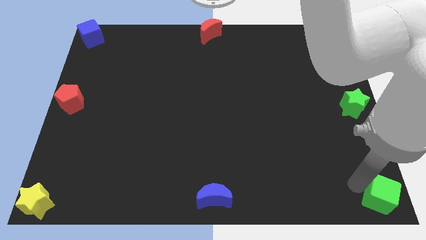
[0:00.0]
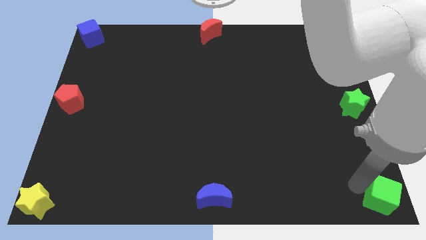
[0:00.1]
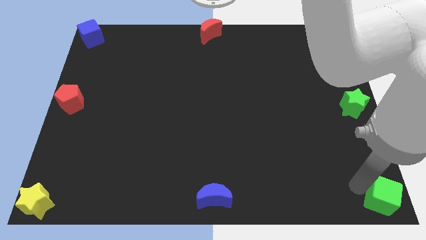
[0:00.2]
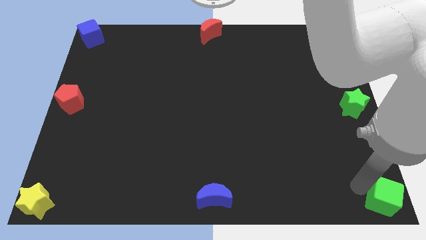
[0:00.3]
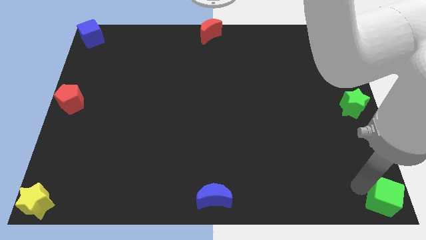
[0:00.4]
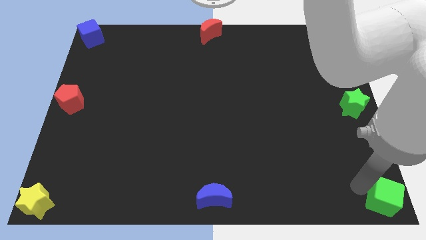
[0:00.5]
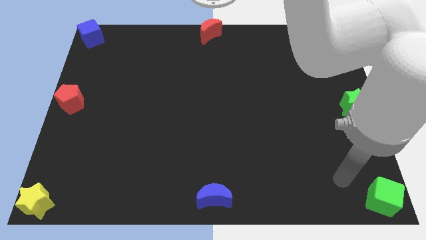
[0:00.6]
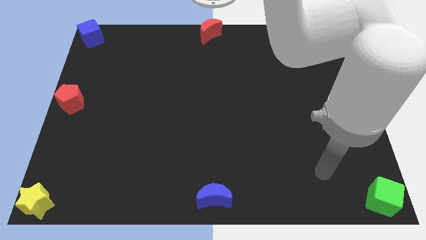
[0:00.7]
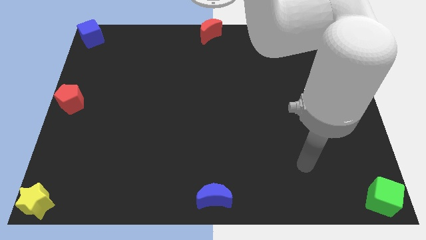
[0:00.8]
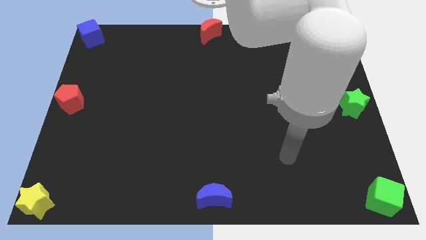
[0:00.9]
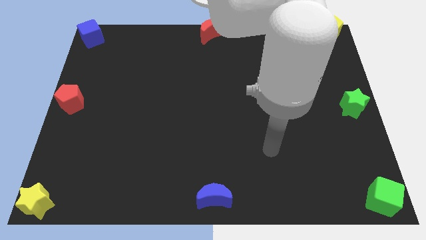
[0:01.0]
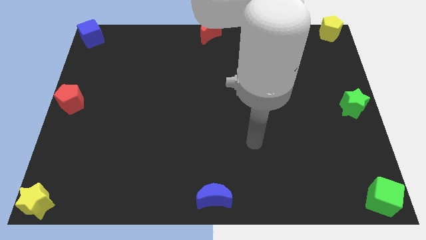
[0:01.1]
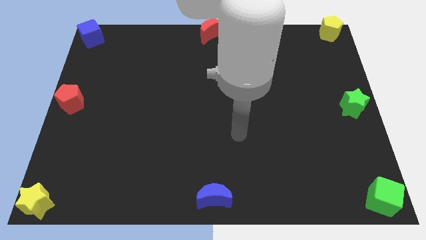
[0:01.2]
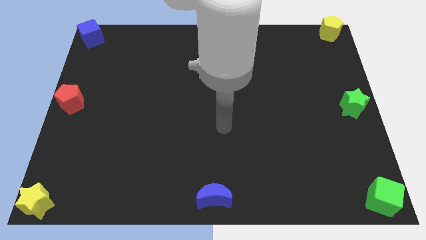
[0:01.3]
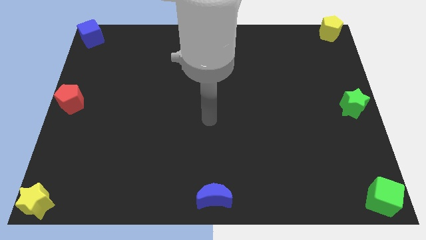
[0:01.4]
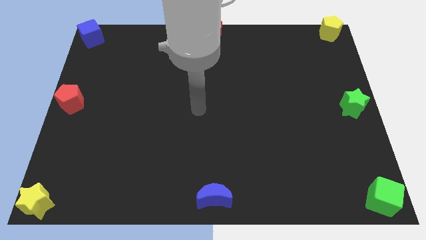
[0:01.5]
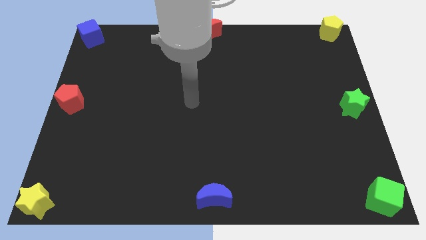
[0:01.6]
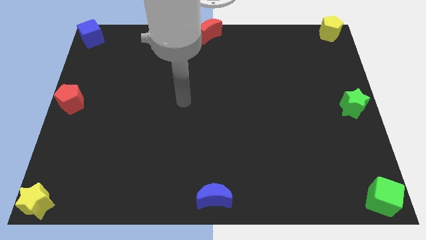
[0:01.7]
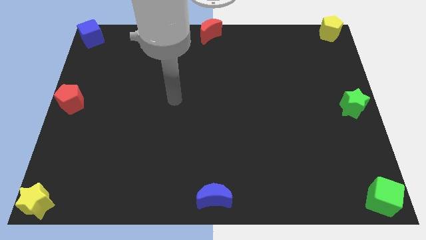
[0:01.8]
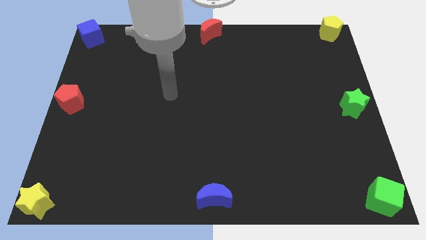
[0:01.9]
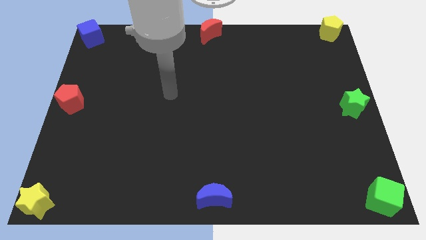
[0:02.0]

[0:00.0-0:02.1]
move your arm away from the green cube

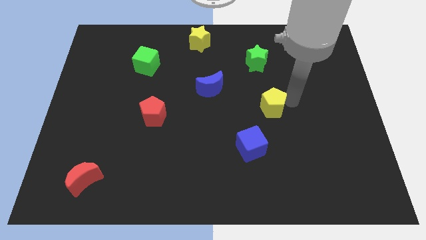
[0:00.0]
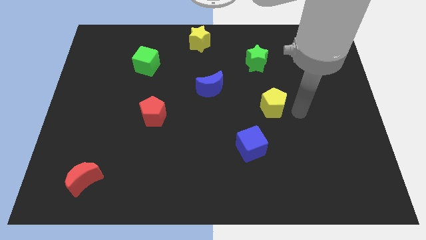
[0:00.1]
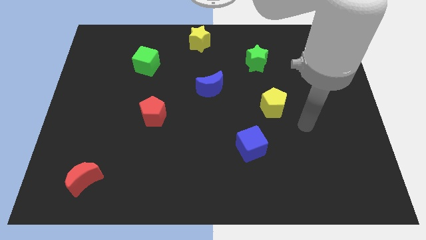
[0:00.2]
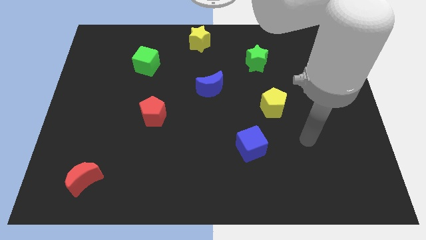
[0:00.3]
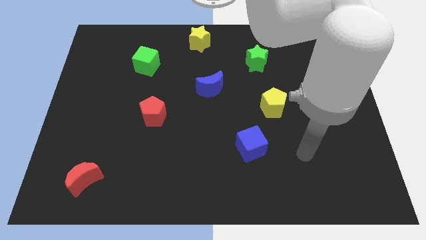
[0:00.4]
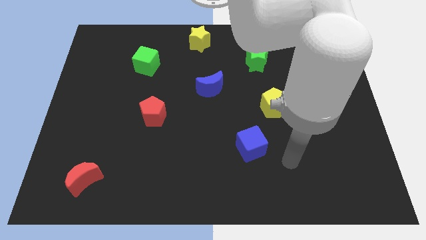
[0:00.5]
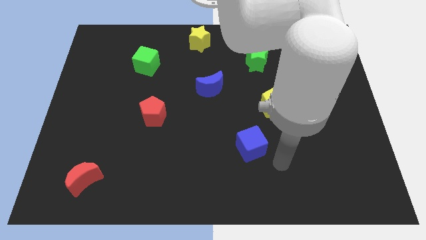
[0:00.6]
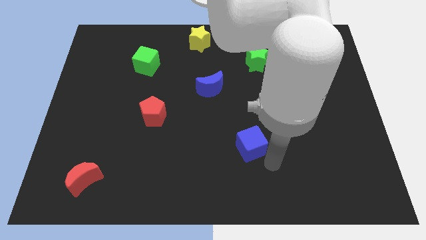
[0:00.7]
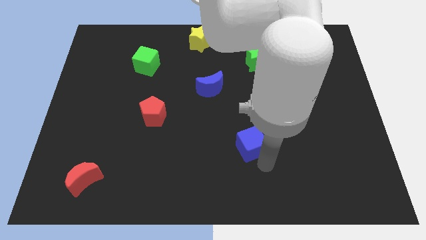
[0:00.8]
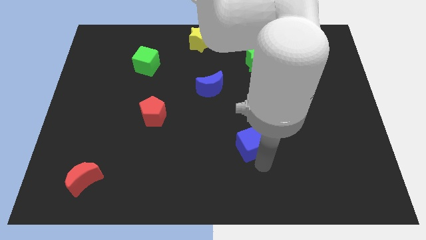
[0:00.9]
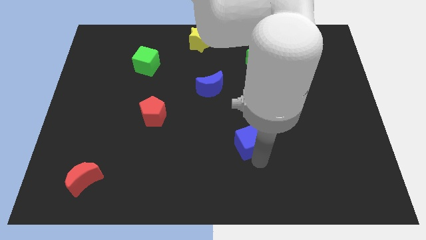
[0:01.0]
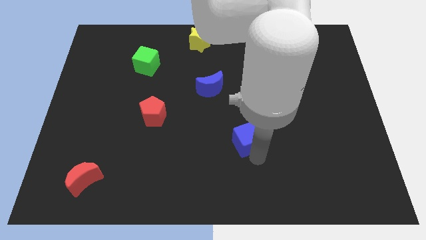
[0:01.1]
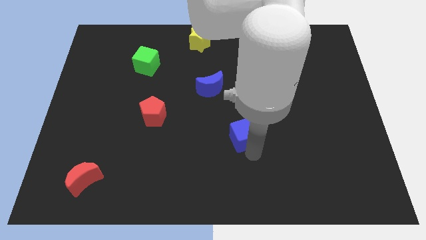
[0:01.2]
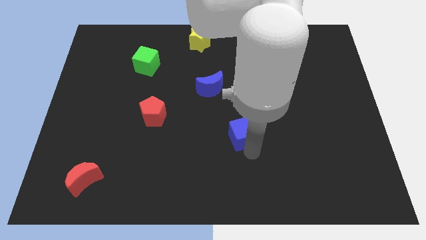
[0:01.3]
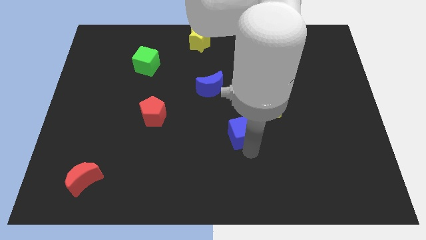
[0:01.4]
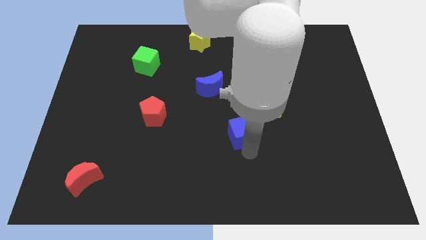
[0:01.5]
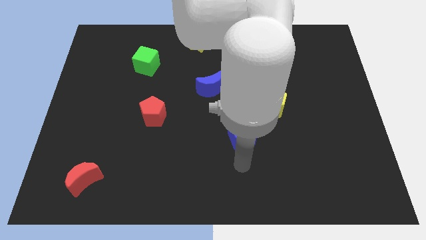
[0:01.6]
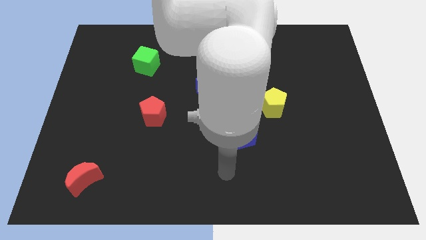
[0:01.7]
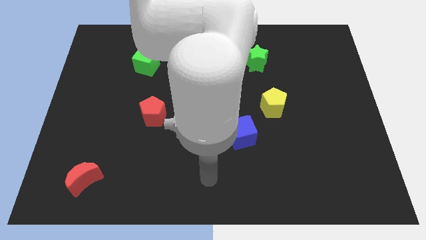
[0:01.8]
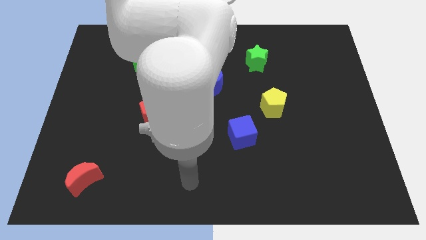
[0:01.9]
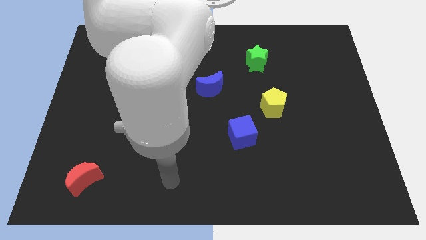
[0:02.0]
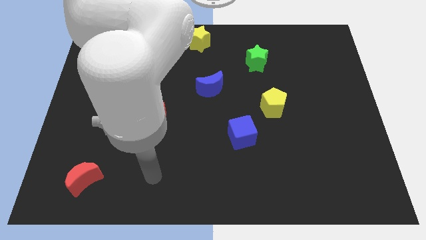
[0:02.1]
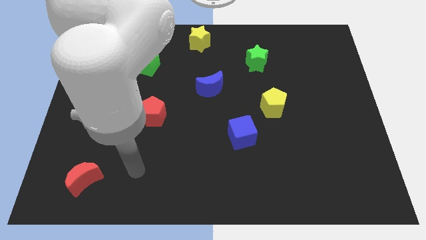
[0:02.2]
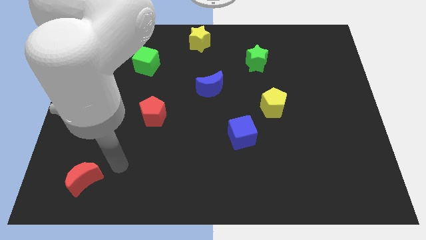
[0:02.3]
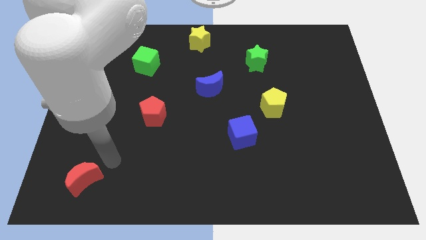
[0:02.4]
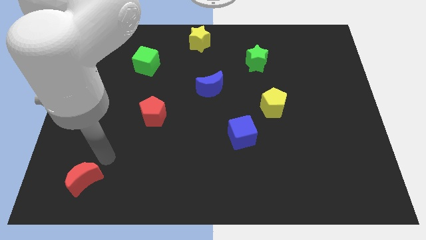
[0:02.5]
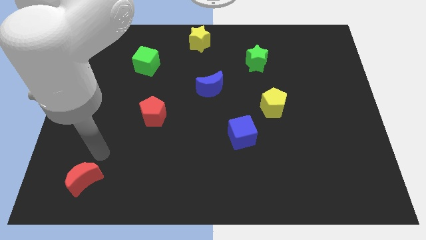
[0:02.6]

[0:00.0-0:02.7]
push the blue cube towards the center of the board

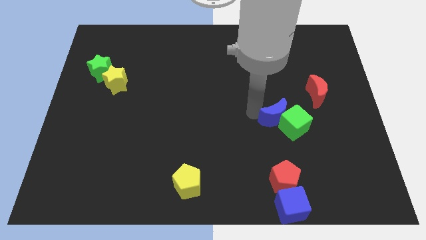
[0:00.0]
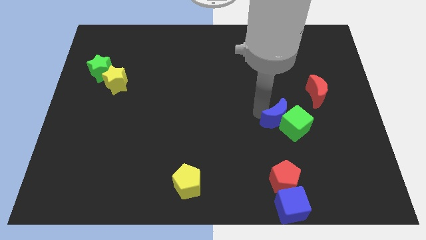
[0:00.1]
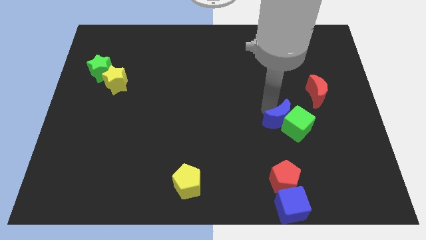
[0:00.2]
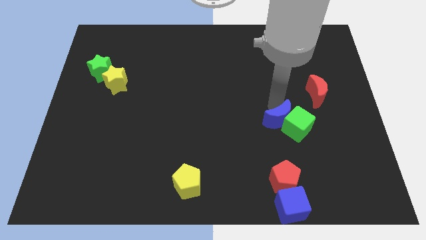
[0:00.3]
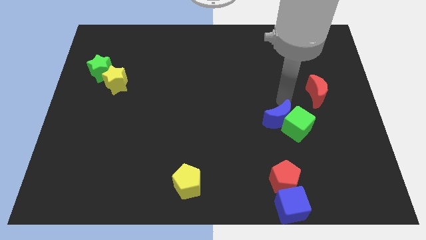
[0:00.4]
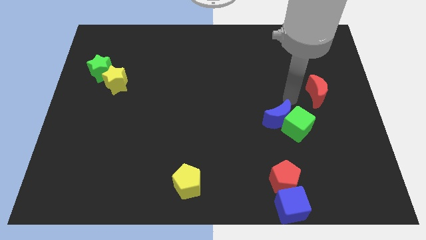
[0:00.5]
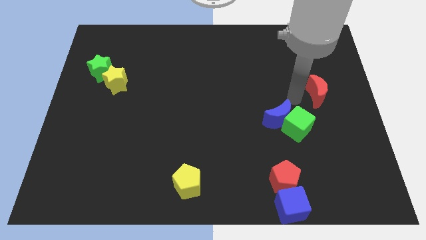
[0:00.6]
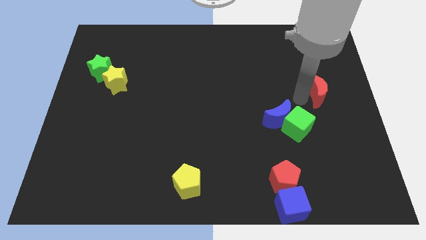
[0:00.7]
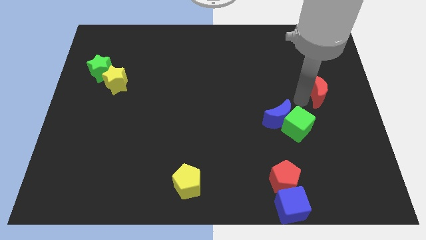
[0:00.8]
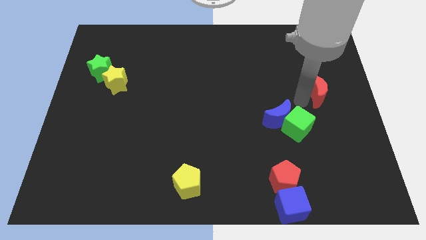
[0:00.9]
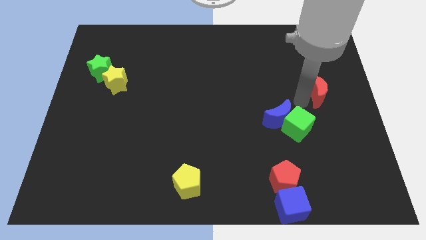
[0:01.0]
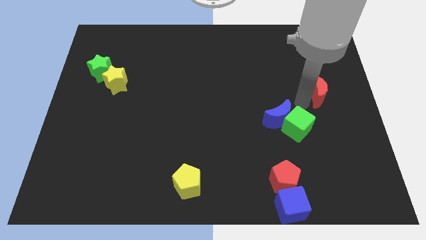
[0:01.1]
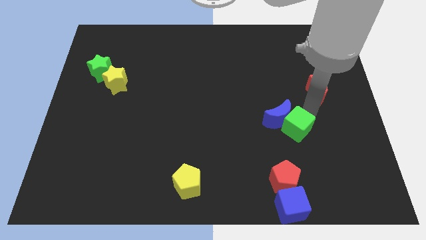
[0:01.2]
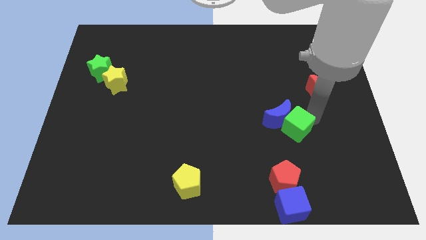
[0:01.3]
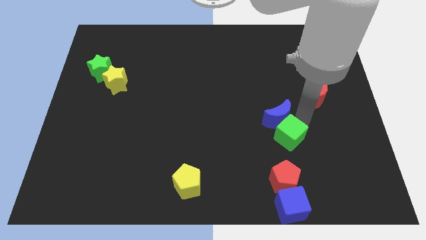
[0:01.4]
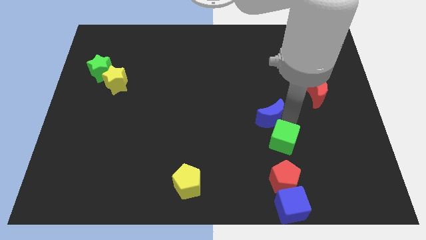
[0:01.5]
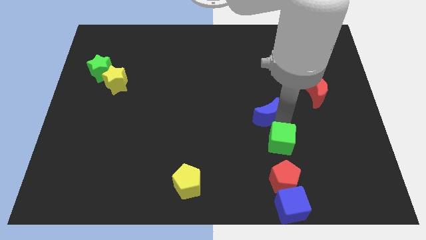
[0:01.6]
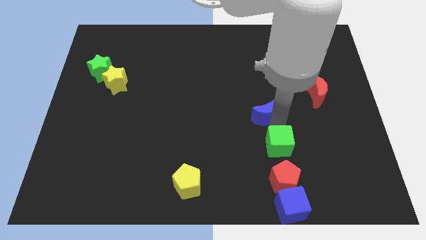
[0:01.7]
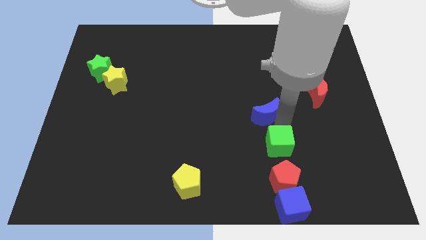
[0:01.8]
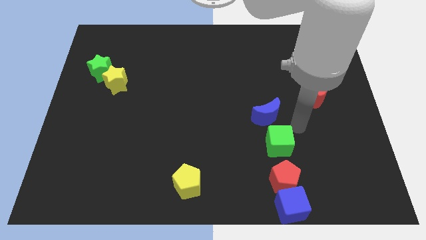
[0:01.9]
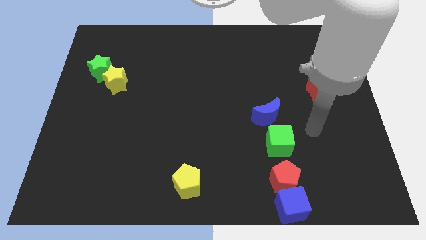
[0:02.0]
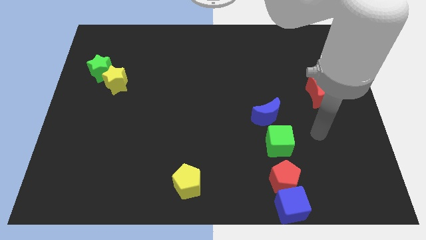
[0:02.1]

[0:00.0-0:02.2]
push green cube towards red pentagon

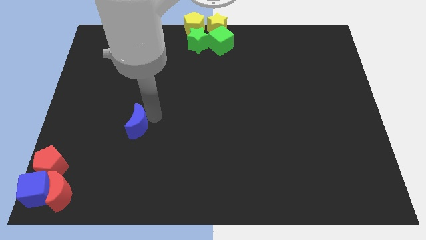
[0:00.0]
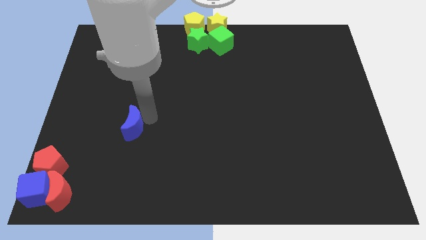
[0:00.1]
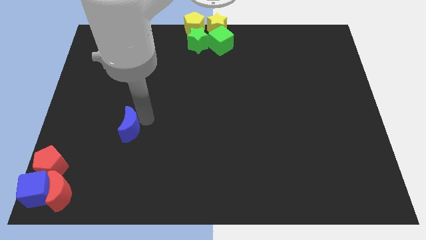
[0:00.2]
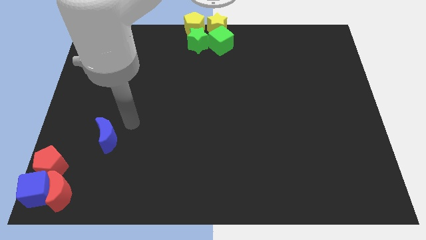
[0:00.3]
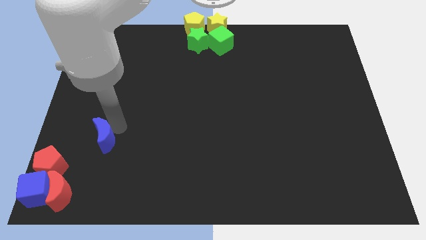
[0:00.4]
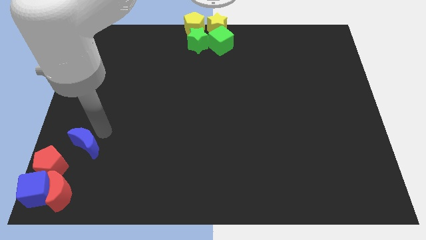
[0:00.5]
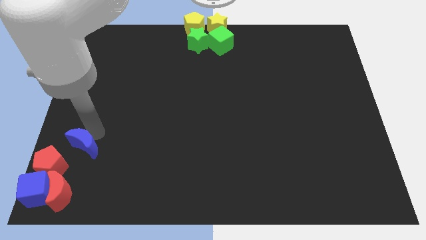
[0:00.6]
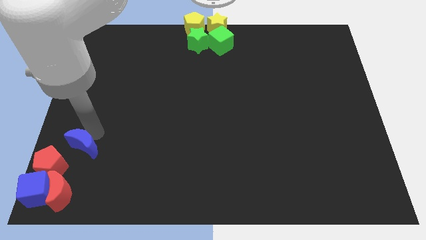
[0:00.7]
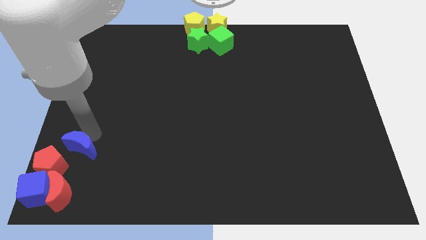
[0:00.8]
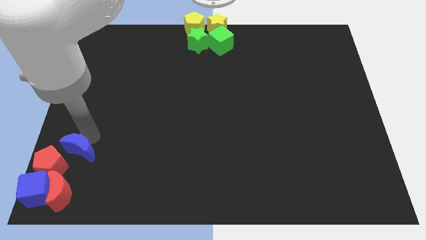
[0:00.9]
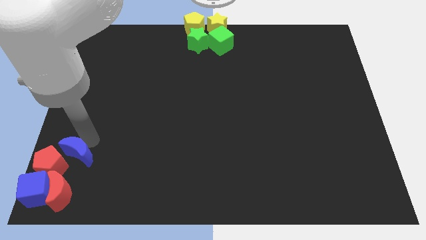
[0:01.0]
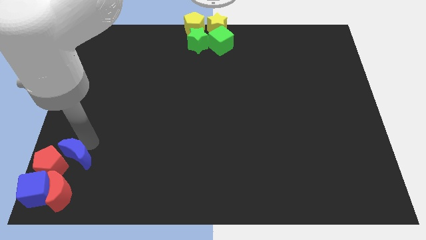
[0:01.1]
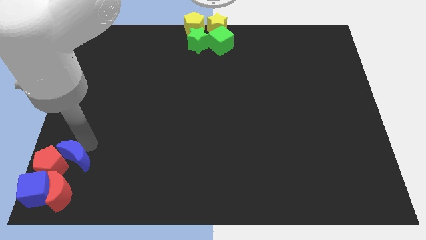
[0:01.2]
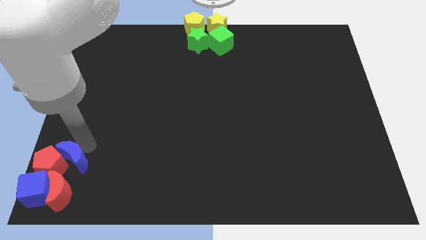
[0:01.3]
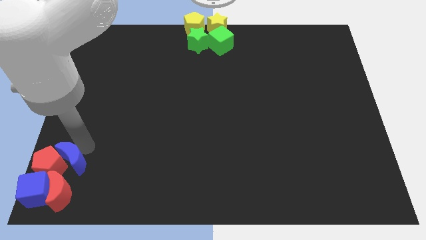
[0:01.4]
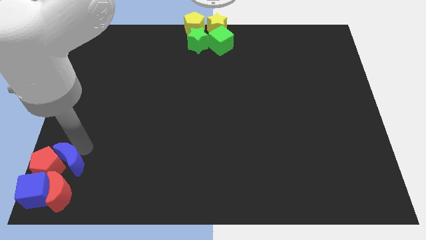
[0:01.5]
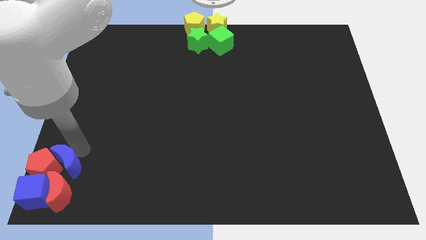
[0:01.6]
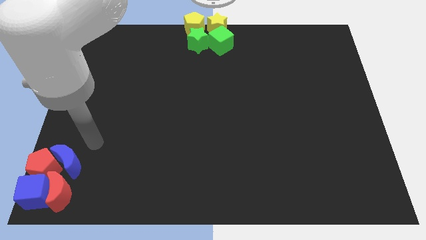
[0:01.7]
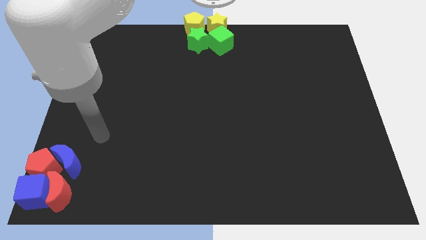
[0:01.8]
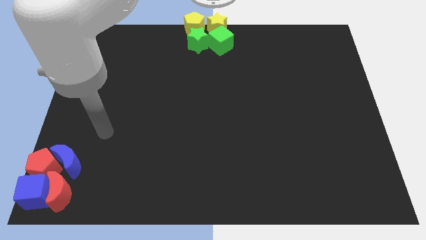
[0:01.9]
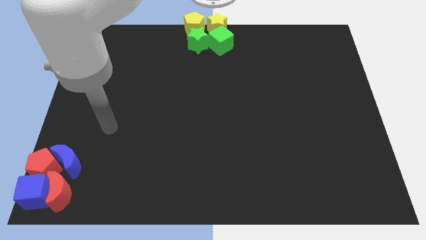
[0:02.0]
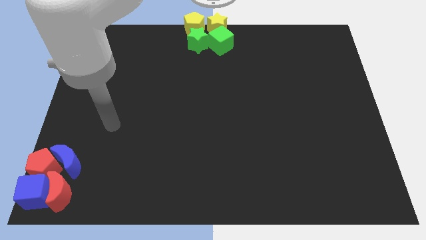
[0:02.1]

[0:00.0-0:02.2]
push blue crescent into the red blocks and the blue cube
